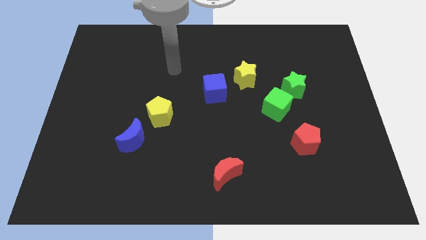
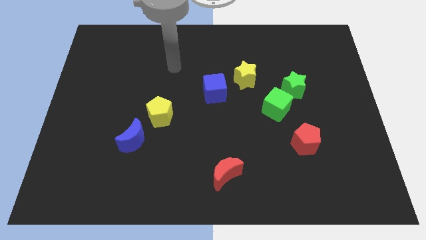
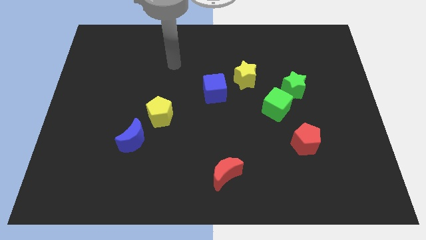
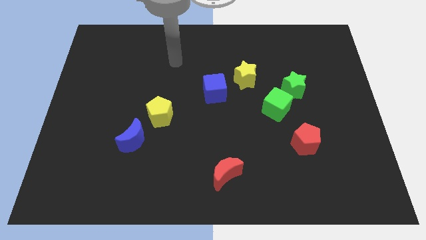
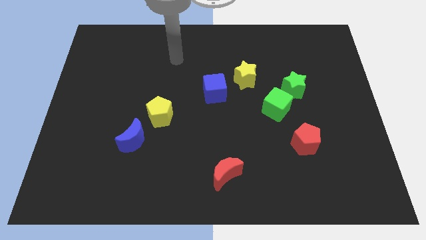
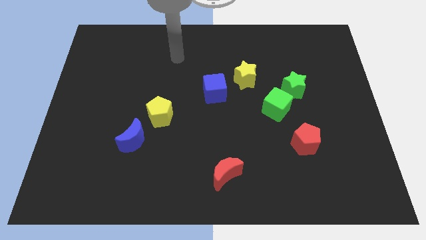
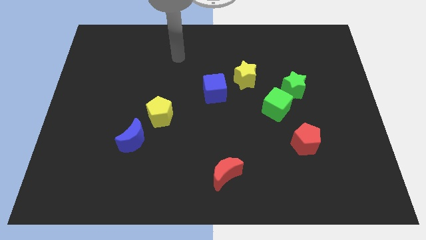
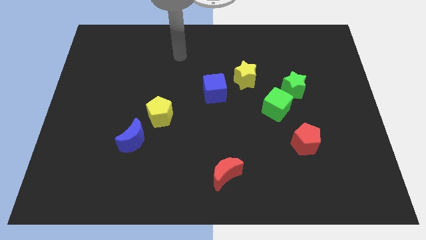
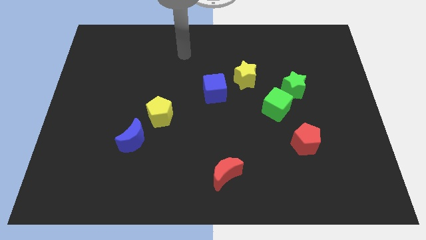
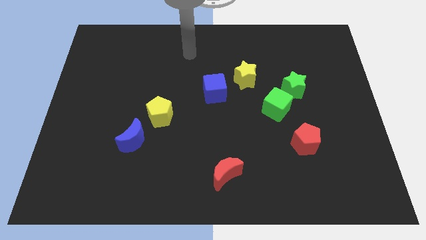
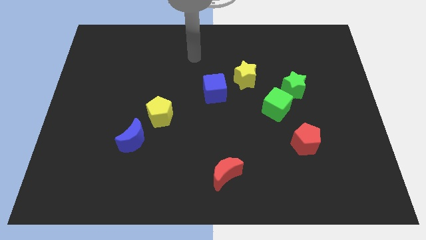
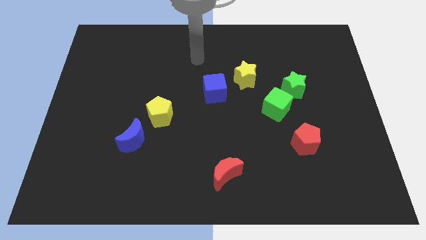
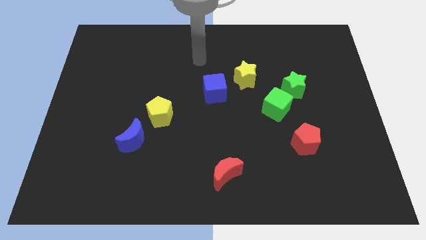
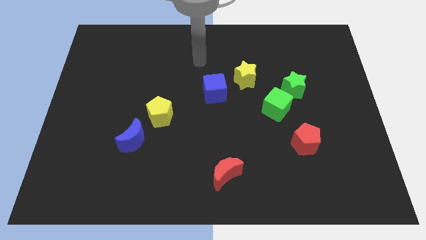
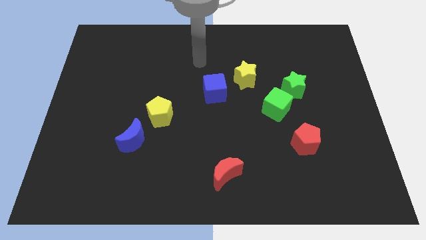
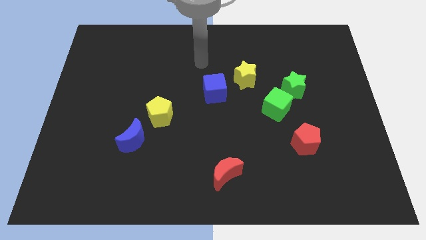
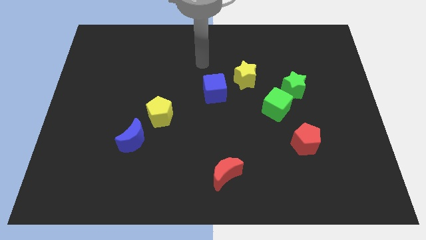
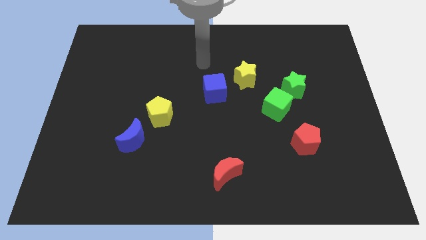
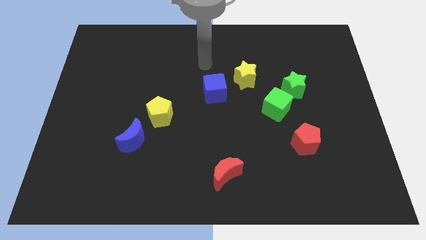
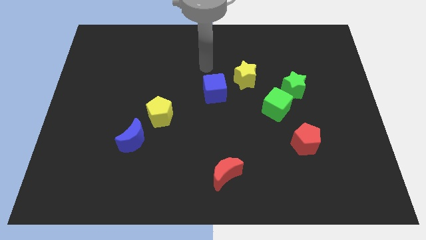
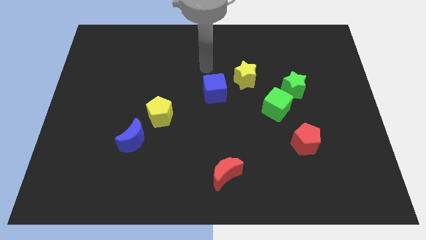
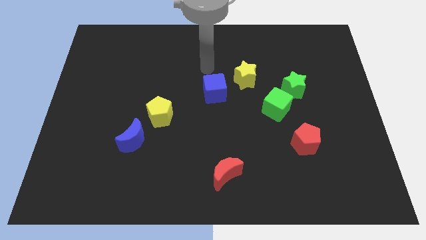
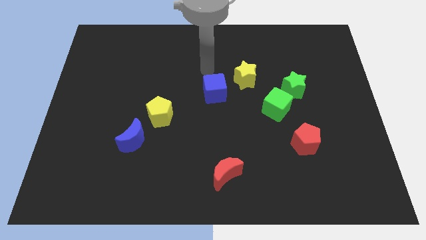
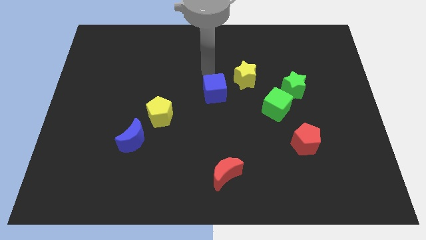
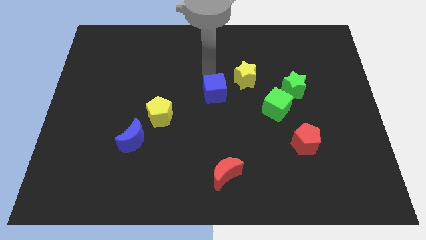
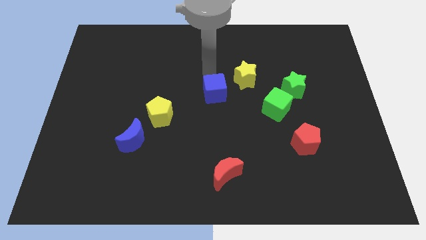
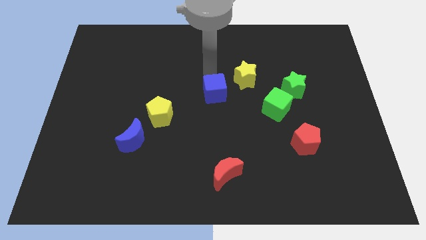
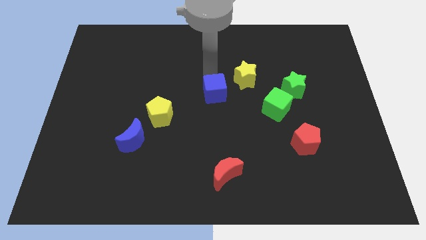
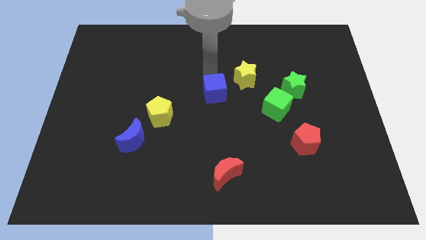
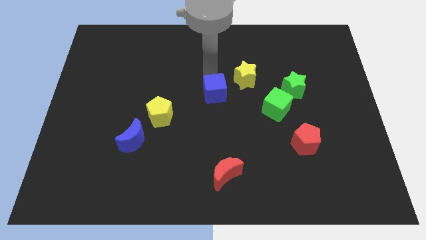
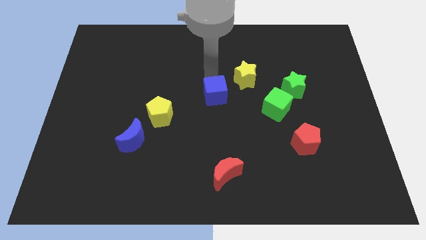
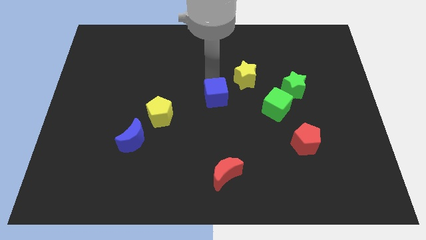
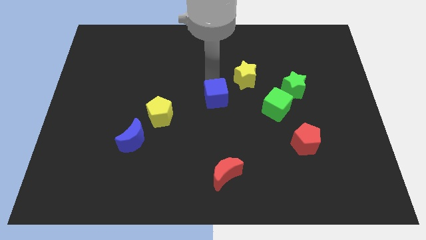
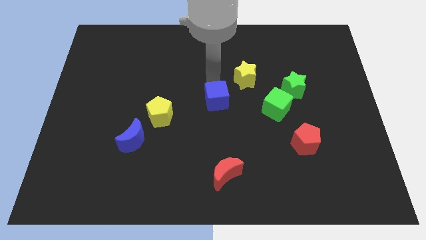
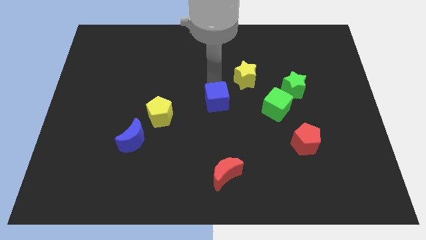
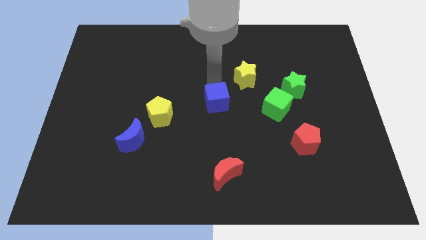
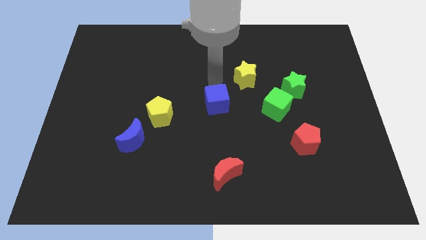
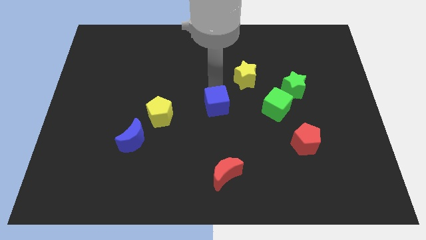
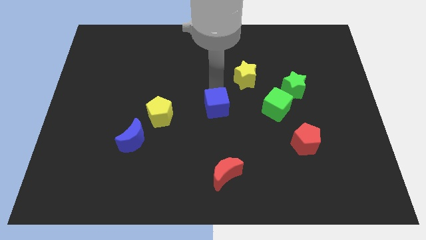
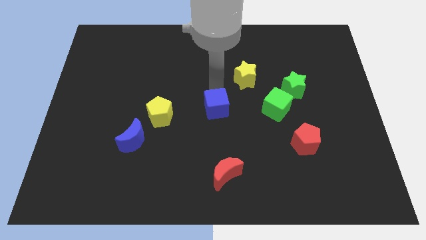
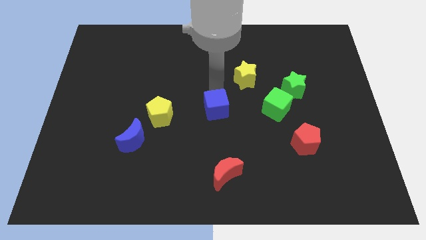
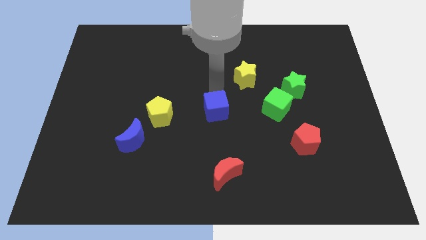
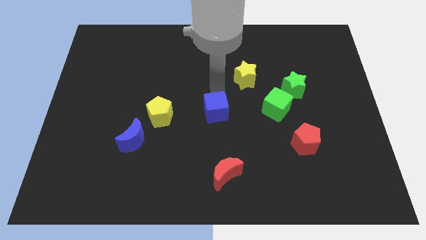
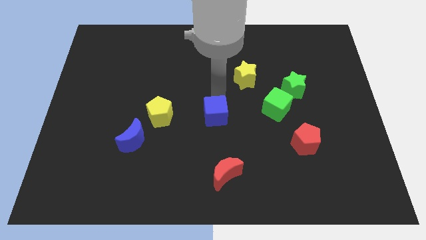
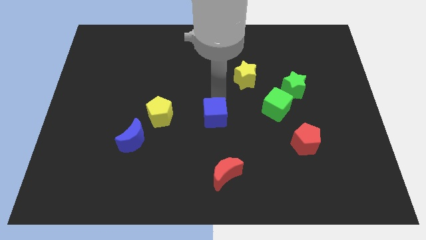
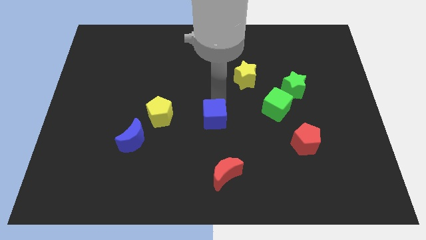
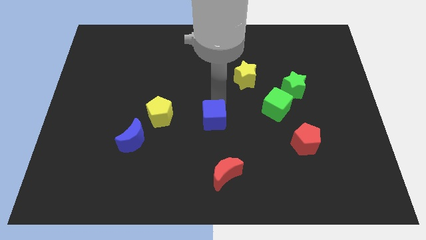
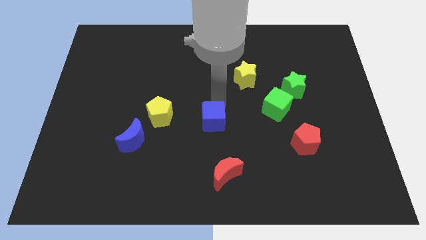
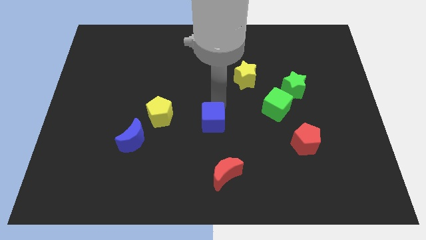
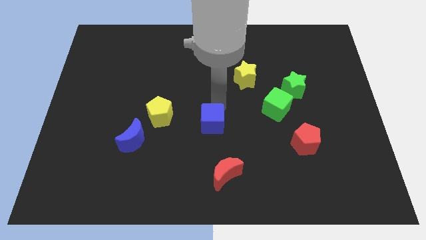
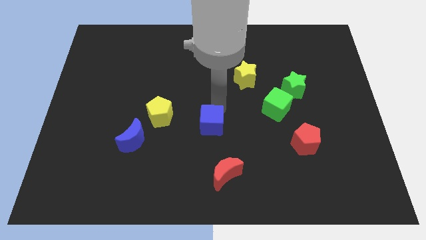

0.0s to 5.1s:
move blue cube to the right of yellow pentagon

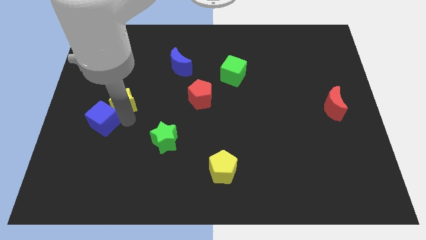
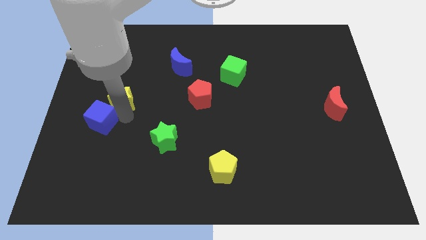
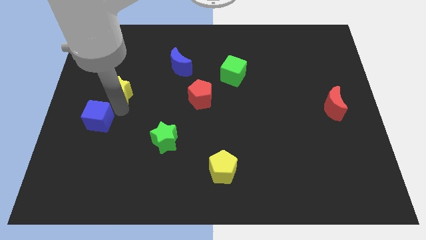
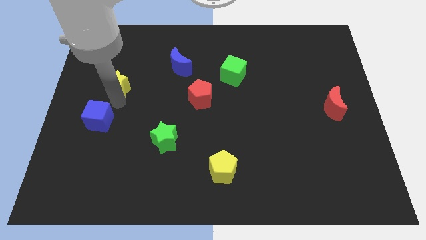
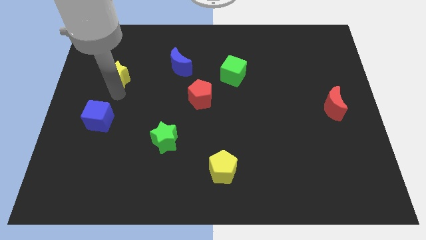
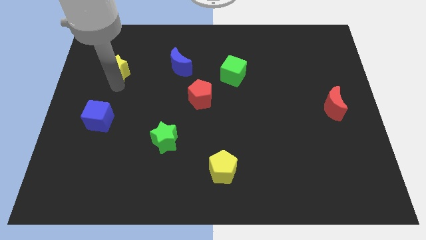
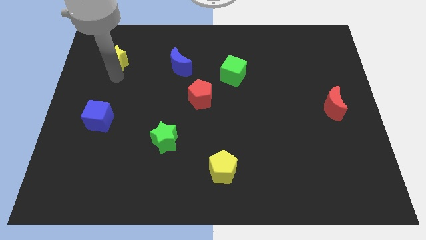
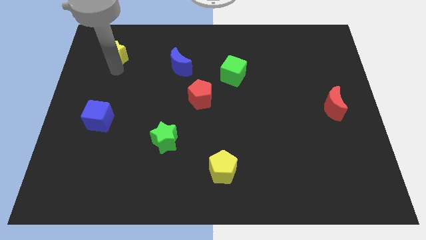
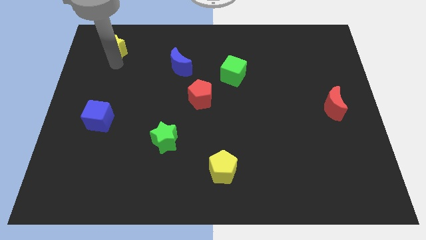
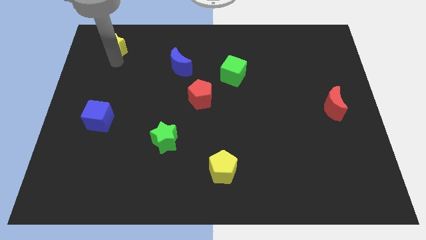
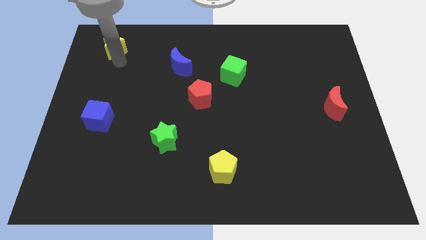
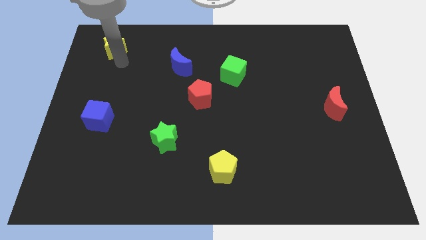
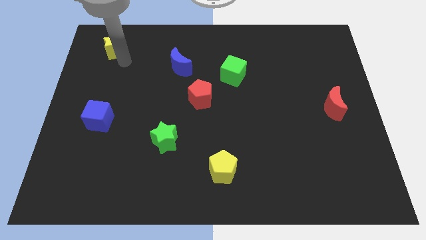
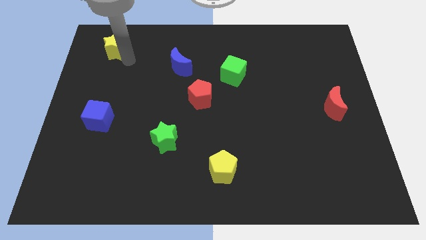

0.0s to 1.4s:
move the yellow star vertically to the top of the blue cube

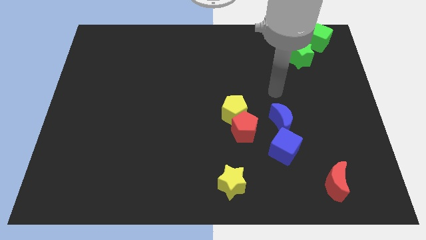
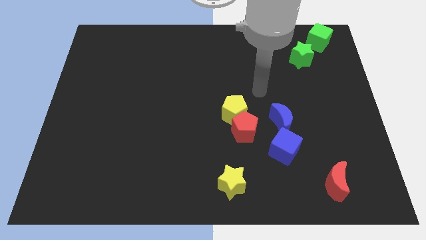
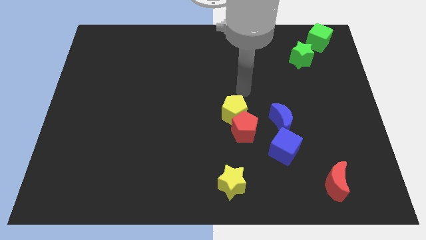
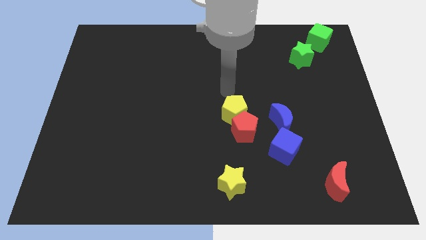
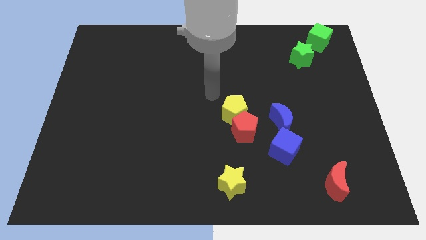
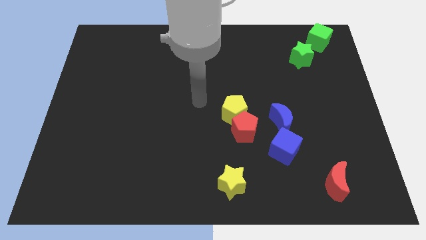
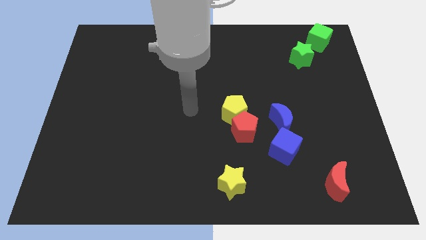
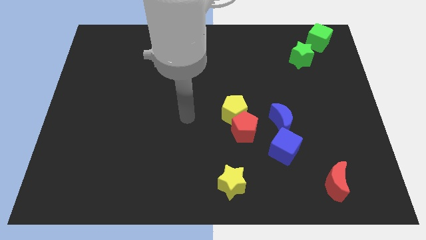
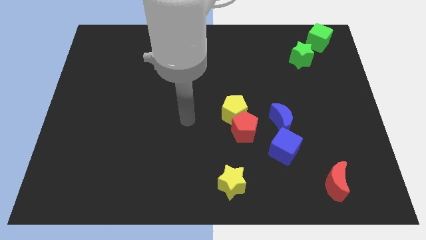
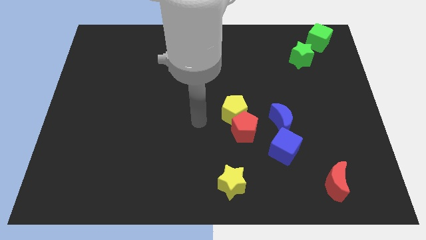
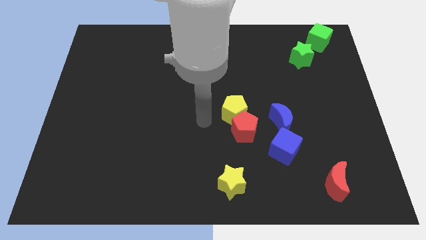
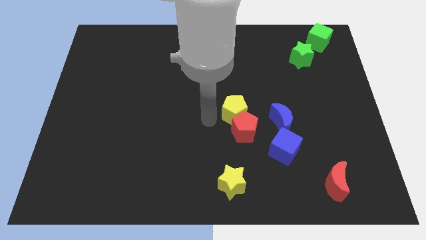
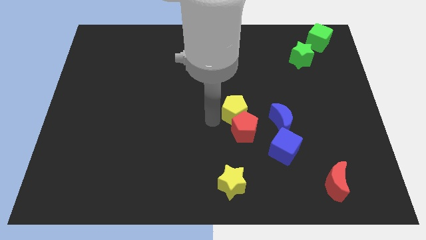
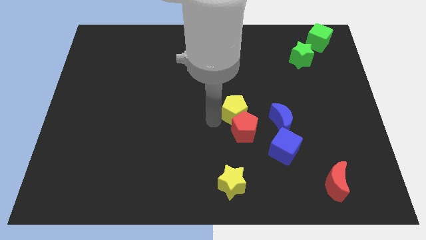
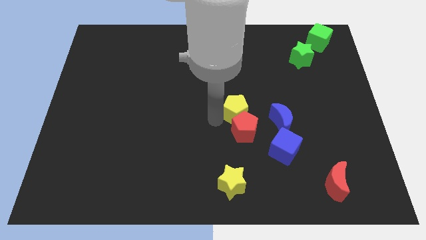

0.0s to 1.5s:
move your arm close to the left side of the yellow pentagon

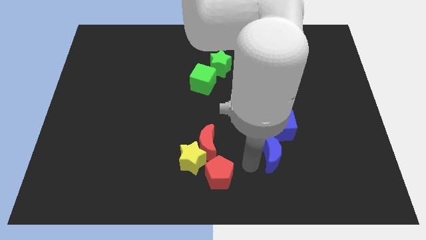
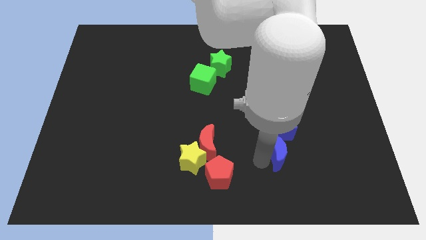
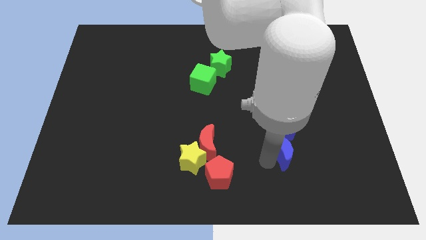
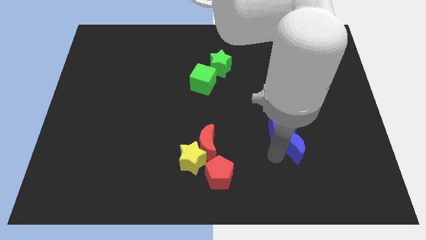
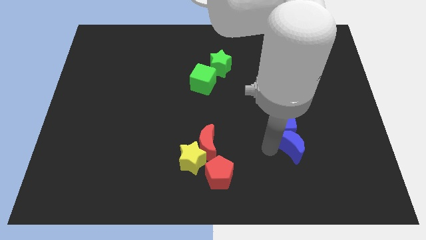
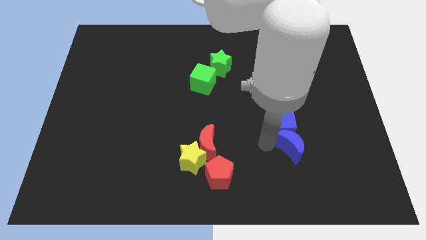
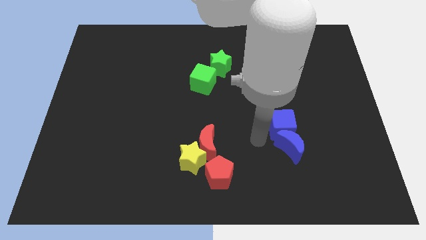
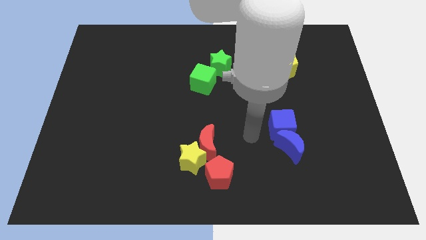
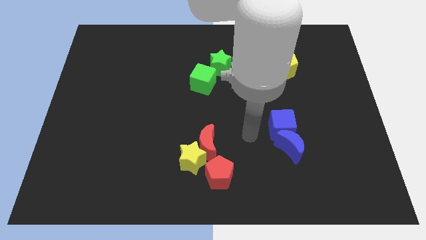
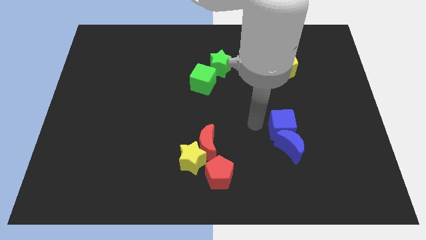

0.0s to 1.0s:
place the blue moon at the bottom of the blue cube
